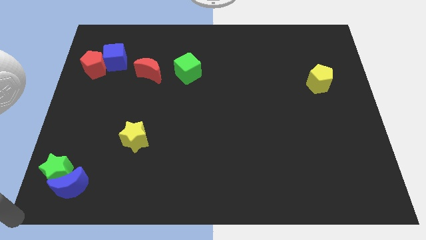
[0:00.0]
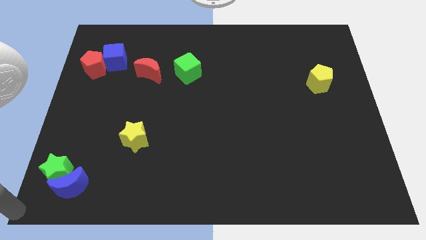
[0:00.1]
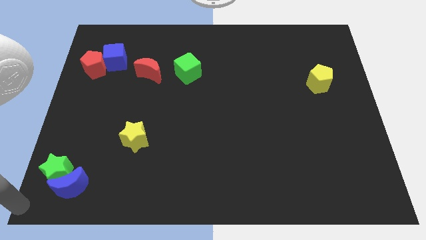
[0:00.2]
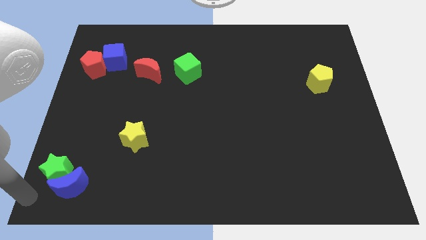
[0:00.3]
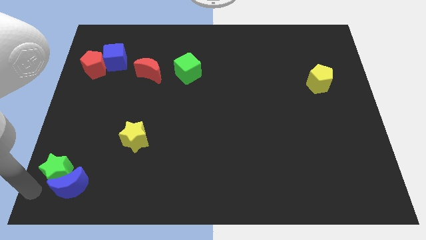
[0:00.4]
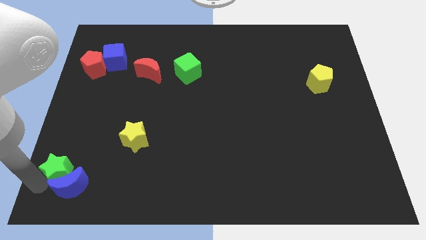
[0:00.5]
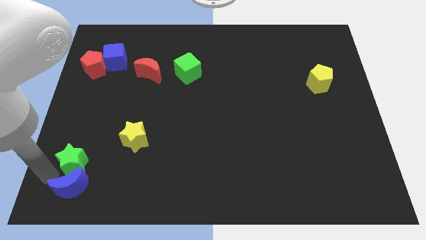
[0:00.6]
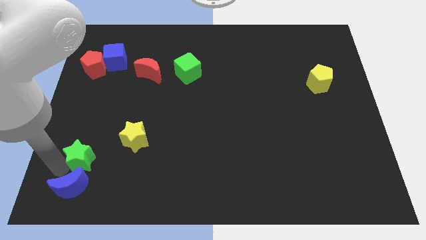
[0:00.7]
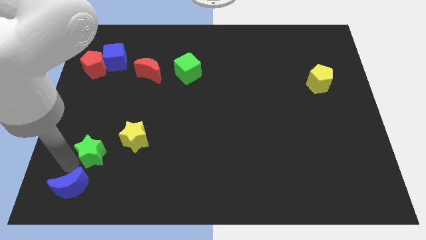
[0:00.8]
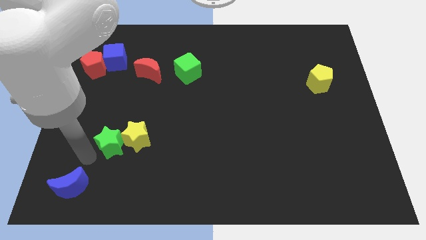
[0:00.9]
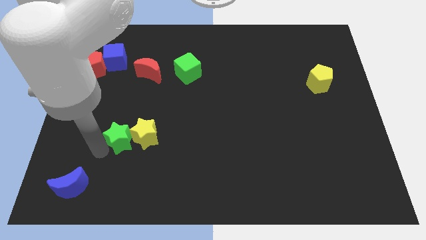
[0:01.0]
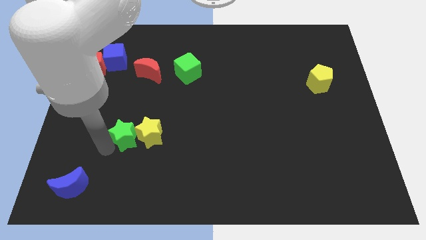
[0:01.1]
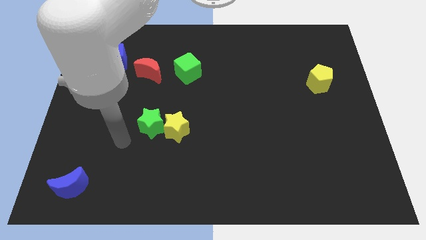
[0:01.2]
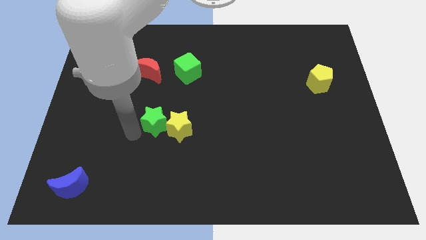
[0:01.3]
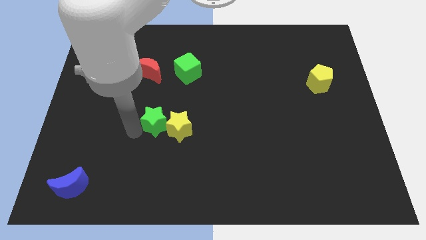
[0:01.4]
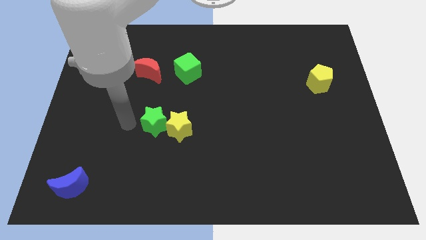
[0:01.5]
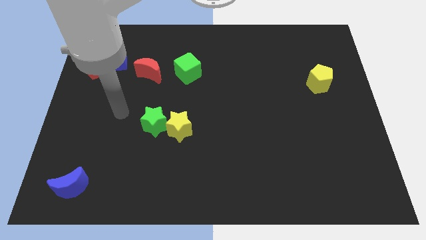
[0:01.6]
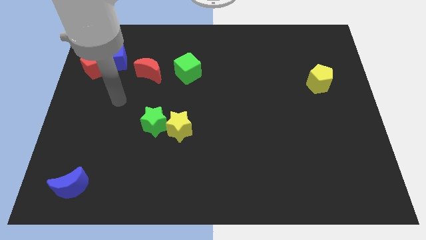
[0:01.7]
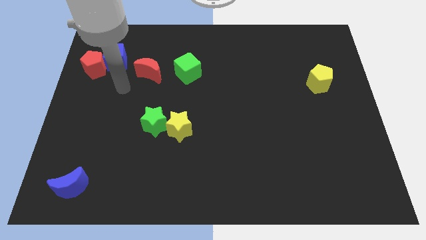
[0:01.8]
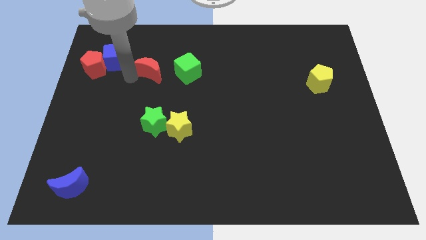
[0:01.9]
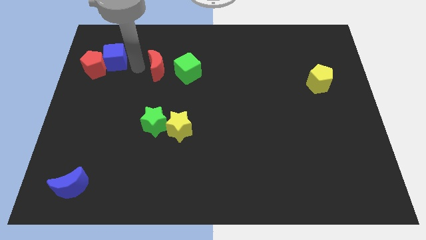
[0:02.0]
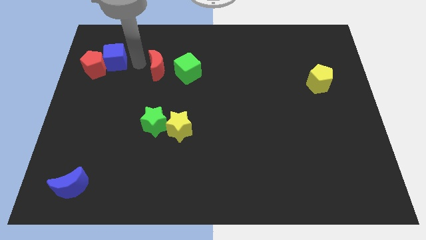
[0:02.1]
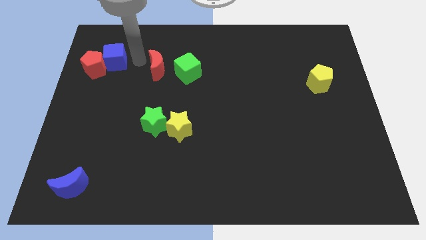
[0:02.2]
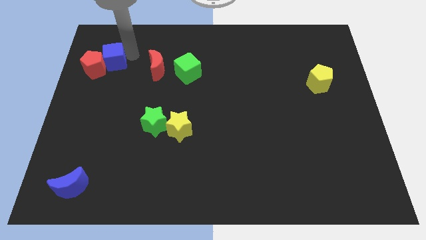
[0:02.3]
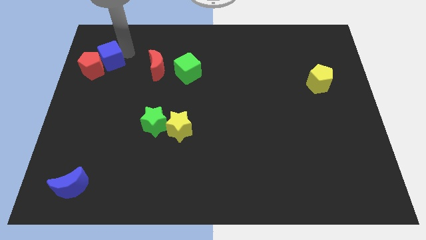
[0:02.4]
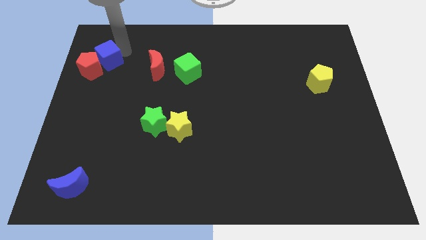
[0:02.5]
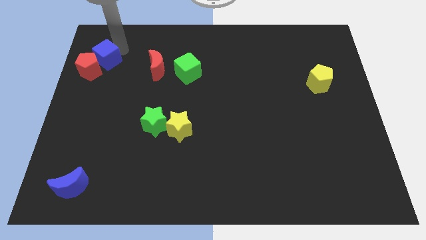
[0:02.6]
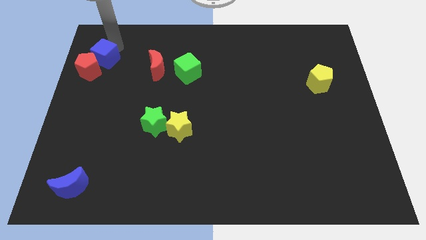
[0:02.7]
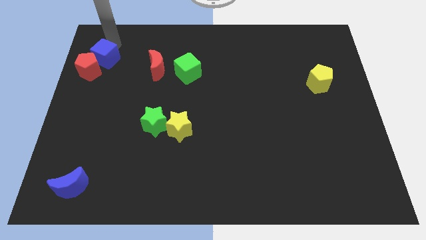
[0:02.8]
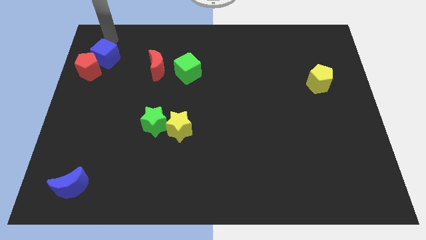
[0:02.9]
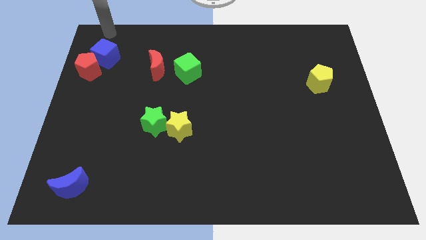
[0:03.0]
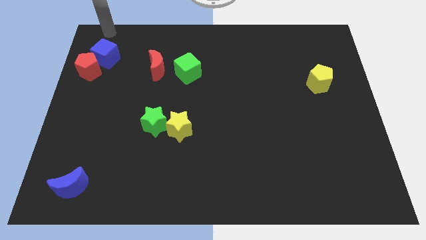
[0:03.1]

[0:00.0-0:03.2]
slide the green star and yellow star towards the center

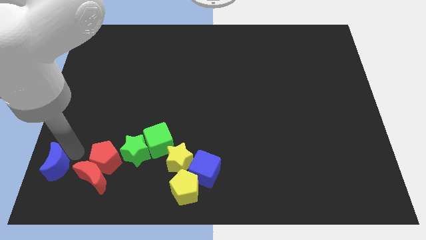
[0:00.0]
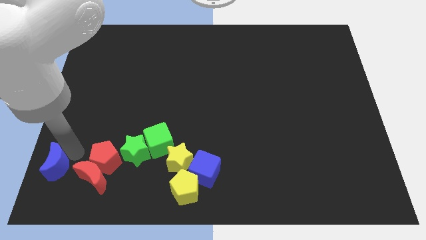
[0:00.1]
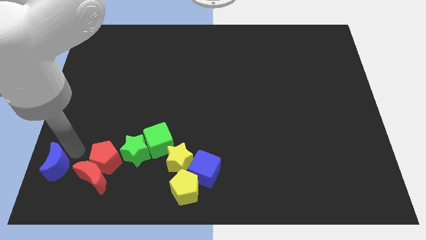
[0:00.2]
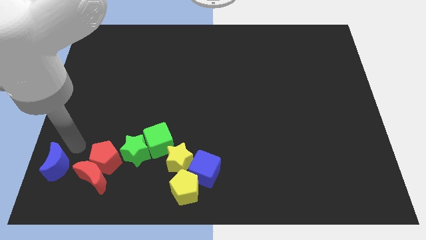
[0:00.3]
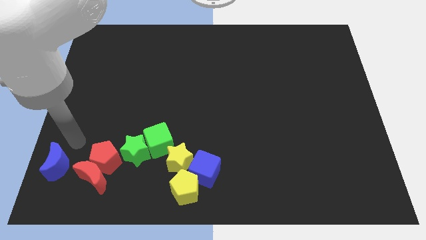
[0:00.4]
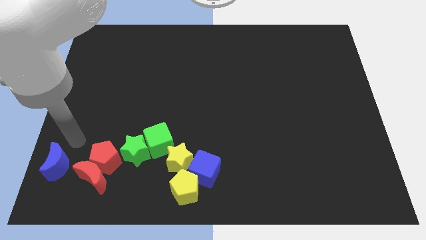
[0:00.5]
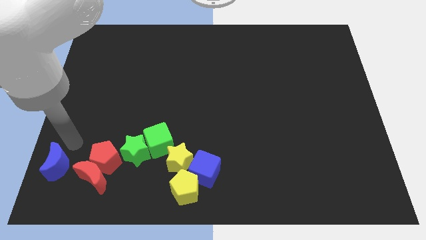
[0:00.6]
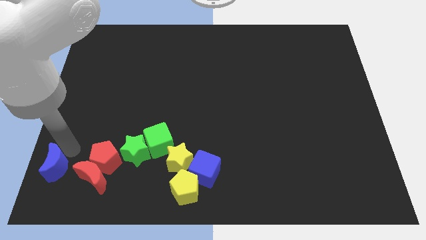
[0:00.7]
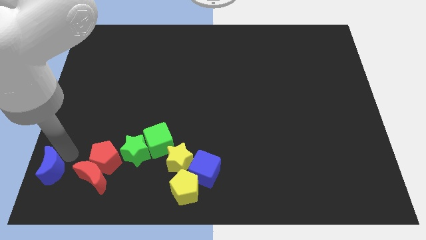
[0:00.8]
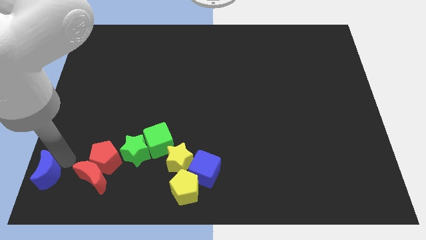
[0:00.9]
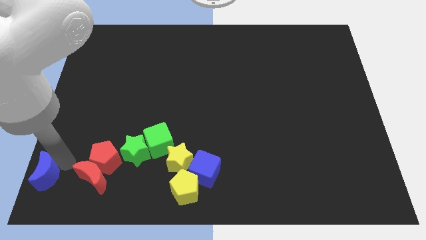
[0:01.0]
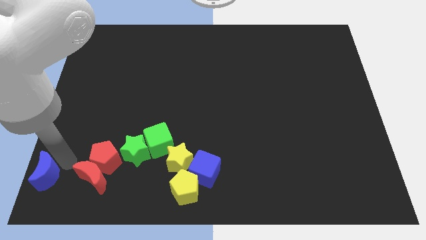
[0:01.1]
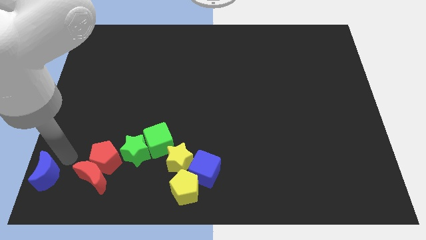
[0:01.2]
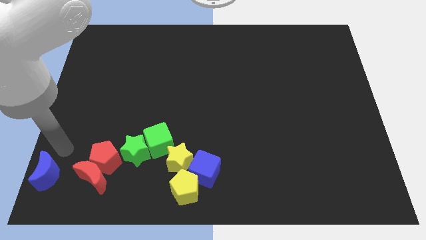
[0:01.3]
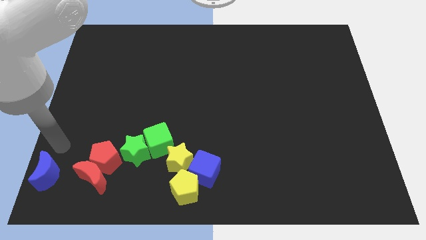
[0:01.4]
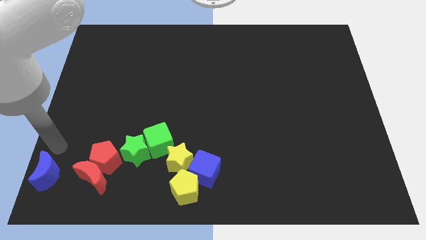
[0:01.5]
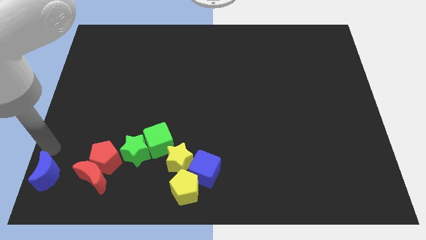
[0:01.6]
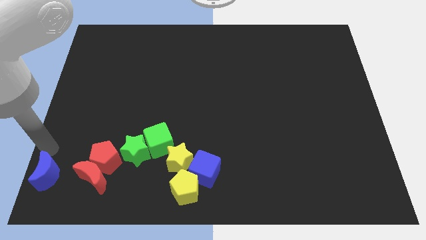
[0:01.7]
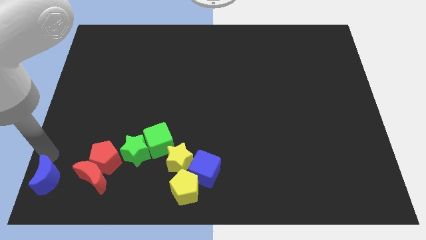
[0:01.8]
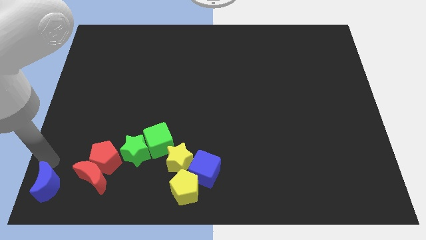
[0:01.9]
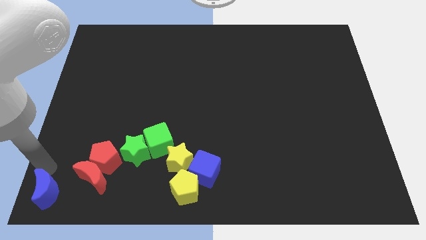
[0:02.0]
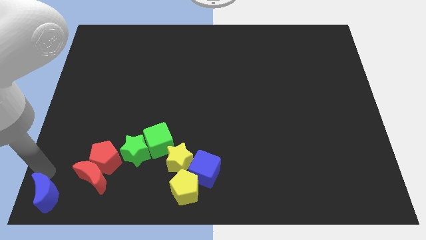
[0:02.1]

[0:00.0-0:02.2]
move the blue crescent to the bottom left of the board

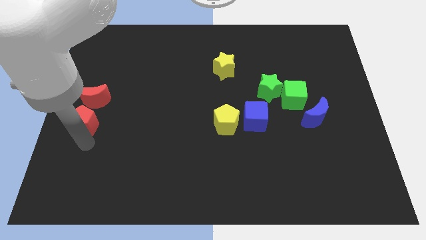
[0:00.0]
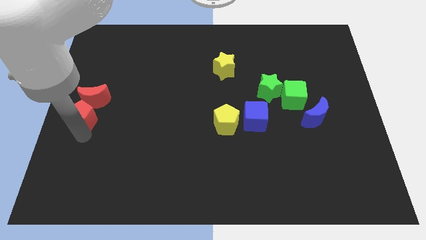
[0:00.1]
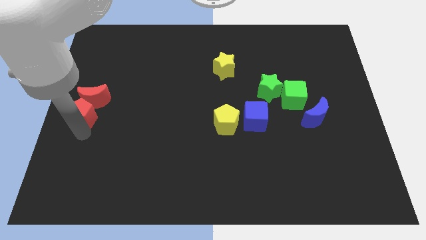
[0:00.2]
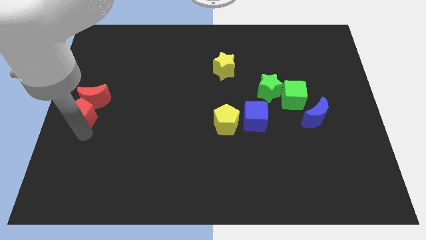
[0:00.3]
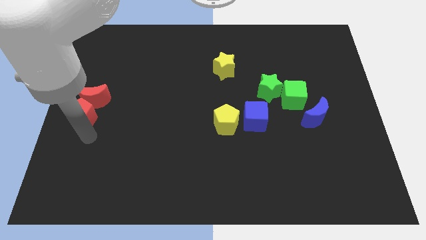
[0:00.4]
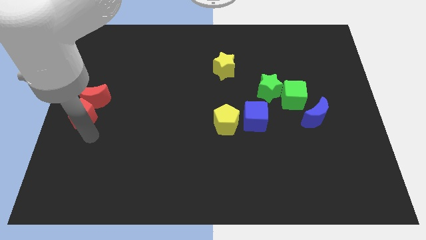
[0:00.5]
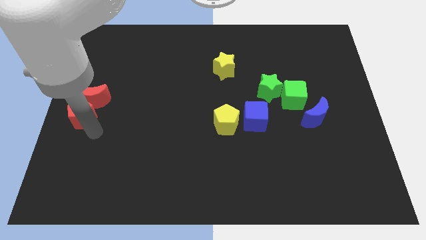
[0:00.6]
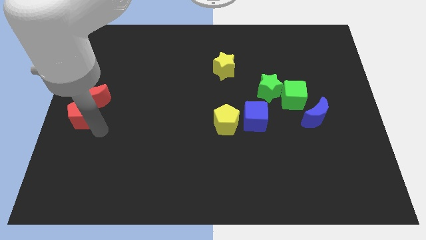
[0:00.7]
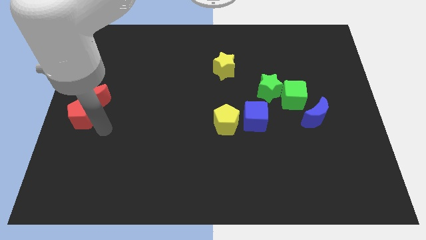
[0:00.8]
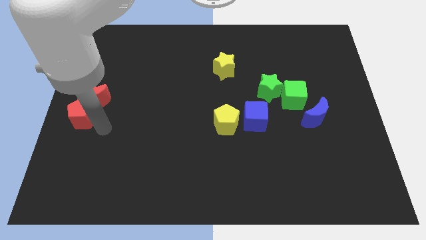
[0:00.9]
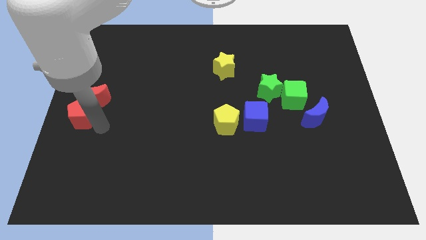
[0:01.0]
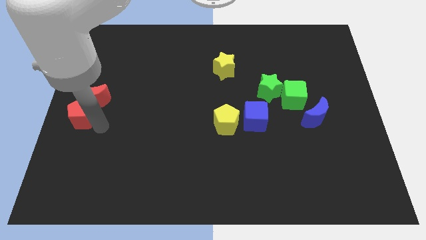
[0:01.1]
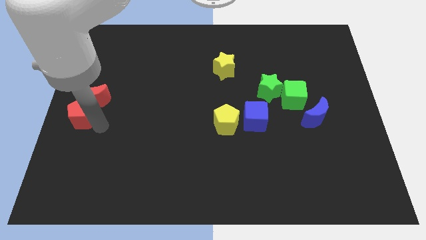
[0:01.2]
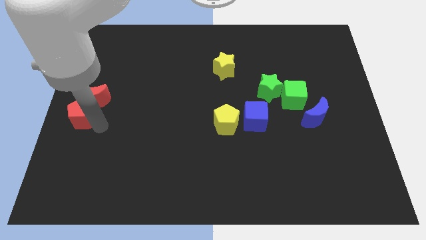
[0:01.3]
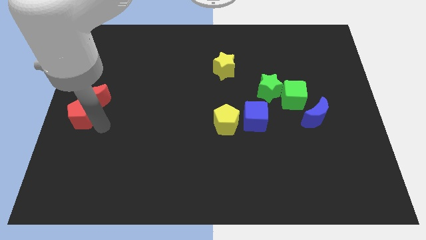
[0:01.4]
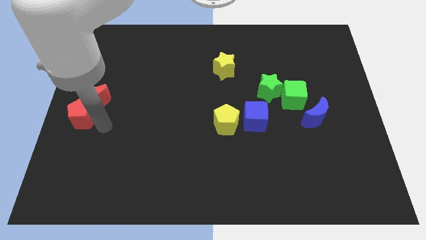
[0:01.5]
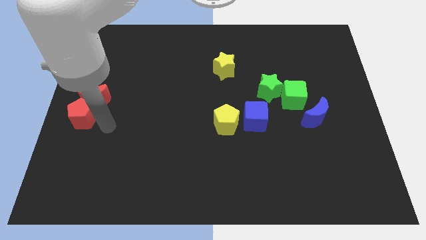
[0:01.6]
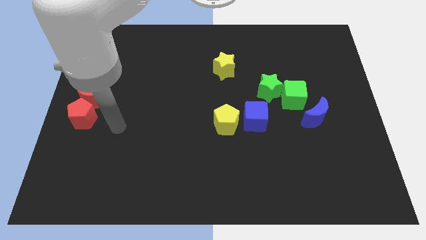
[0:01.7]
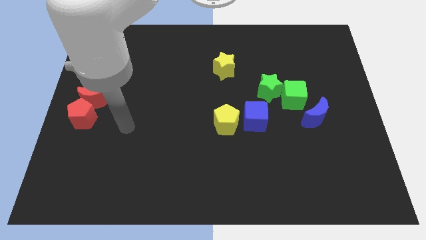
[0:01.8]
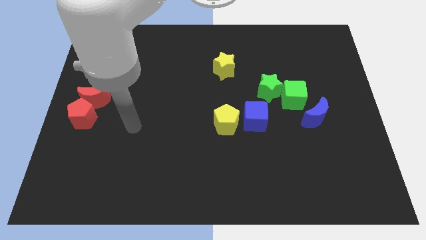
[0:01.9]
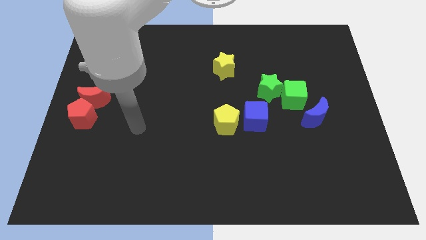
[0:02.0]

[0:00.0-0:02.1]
move the red pentagon to the bottom of the red crescent

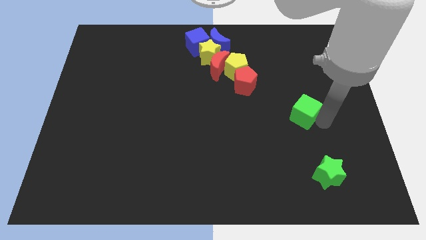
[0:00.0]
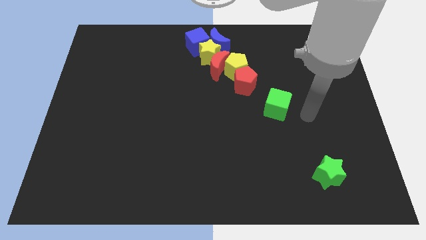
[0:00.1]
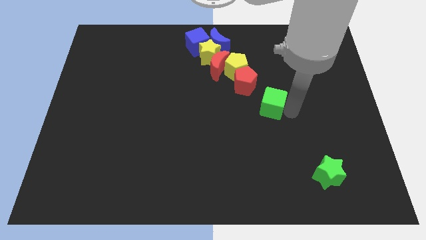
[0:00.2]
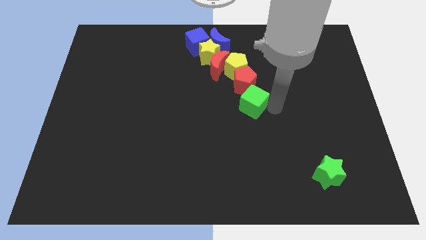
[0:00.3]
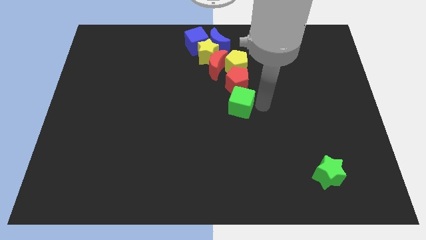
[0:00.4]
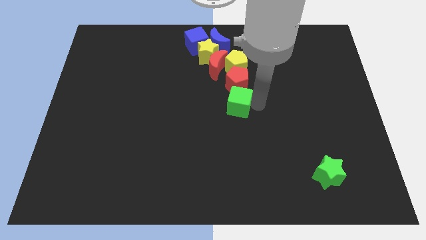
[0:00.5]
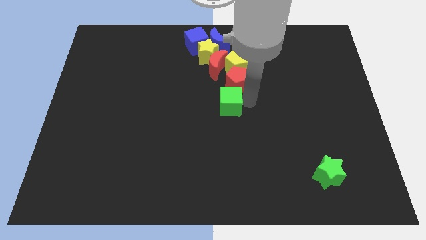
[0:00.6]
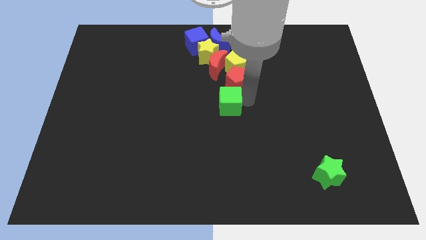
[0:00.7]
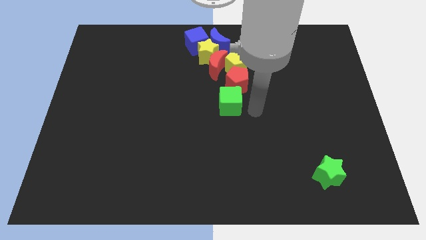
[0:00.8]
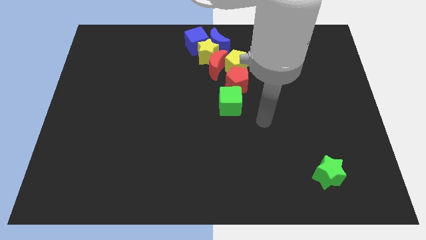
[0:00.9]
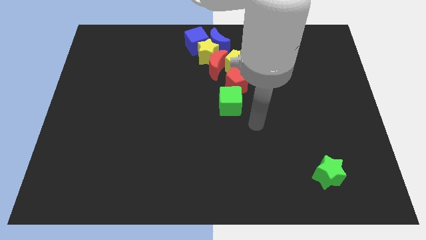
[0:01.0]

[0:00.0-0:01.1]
move green cube to the center of the board

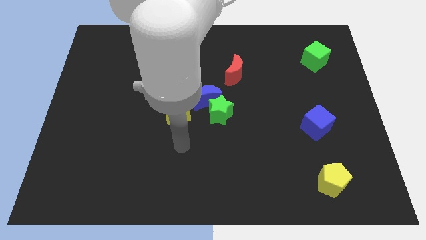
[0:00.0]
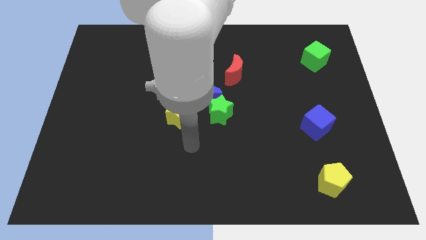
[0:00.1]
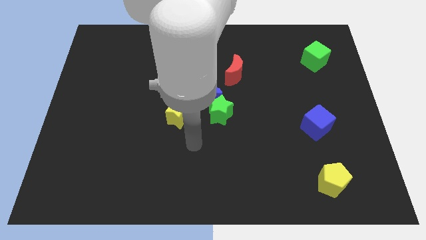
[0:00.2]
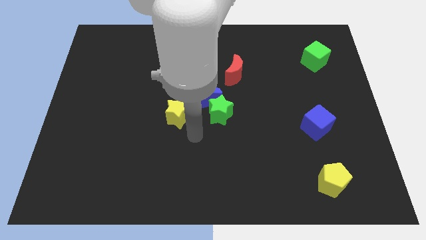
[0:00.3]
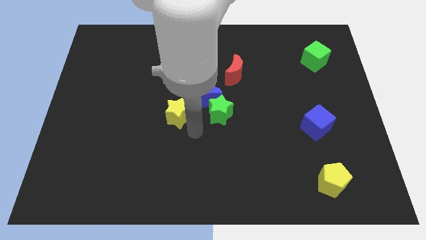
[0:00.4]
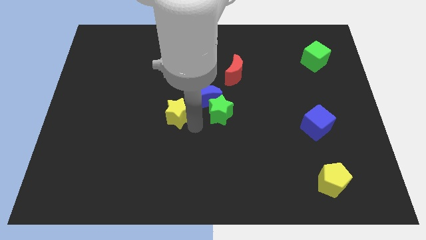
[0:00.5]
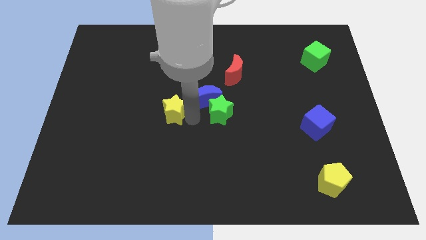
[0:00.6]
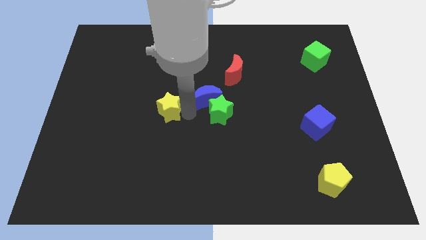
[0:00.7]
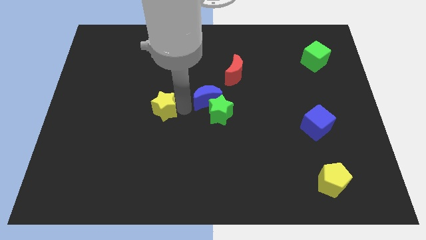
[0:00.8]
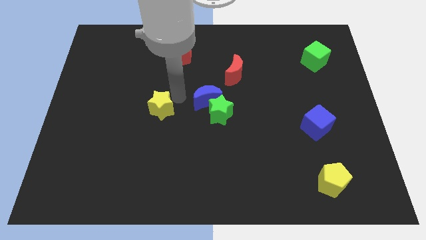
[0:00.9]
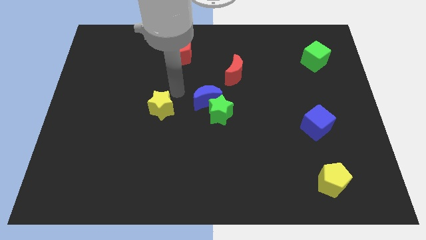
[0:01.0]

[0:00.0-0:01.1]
slightly push yellow star to its left
